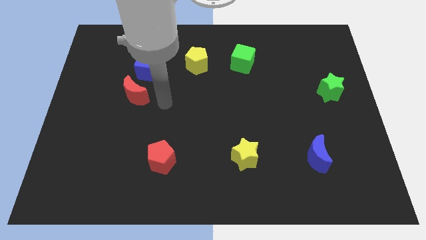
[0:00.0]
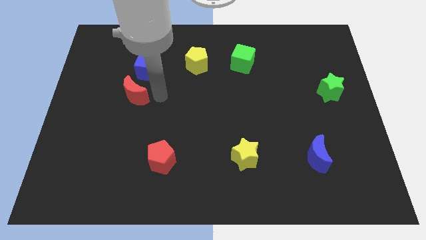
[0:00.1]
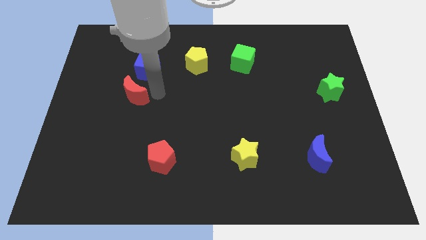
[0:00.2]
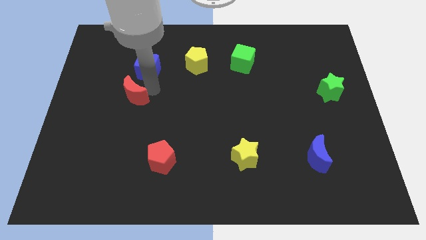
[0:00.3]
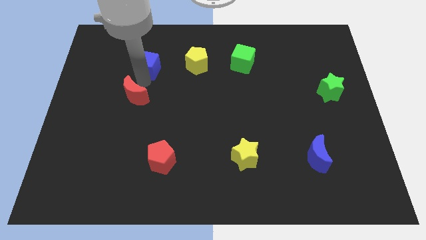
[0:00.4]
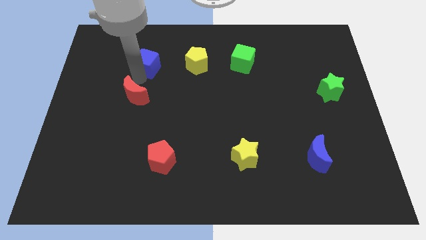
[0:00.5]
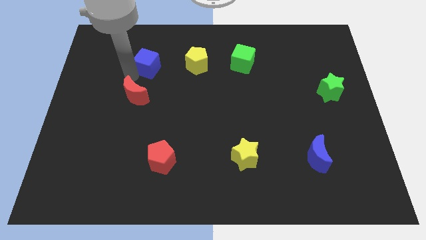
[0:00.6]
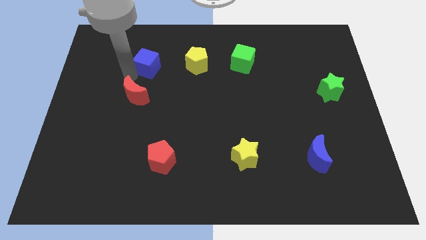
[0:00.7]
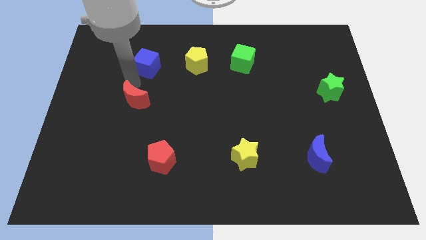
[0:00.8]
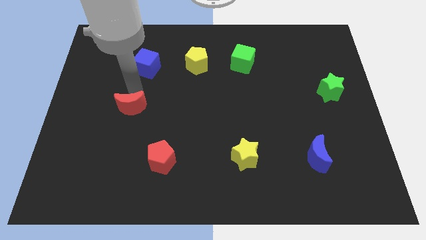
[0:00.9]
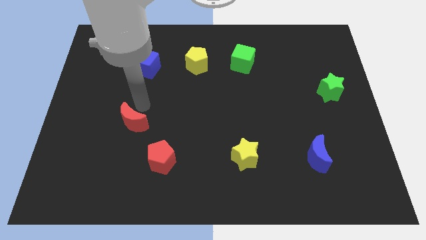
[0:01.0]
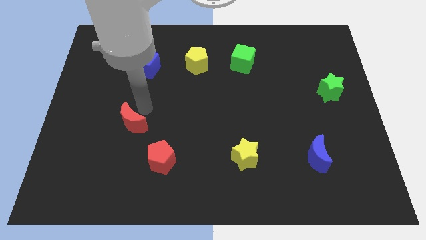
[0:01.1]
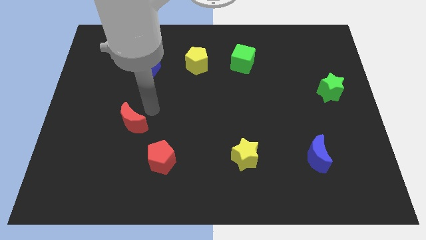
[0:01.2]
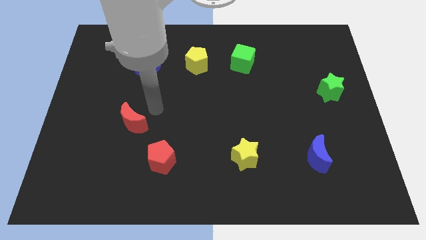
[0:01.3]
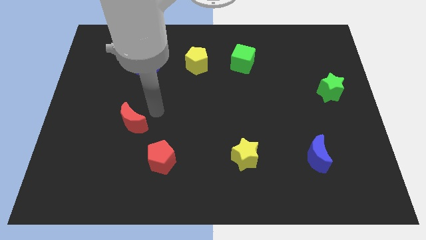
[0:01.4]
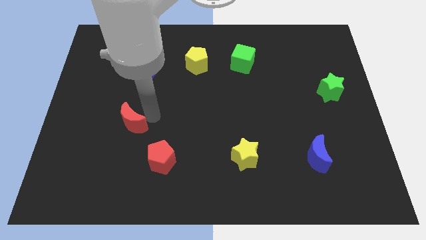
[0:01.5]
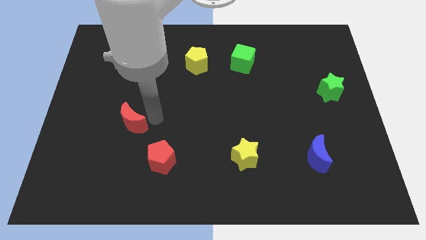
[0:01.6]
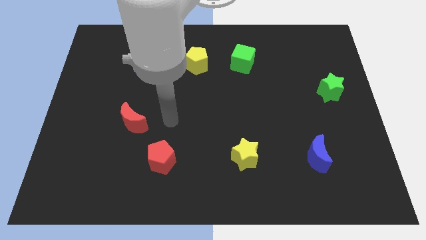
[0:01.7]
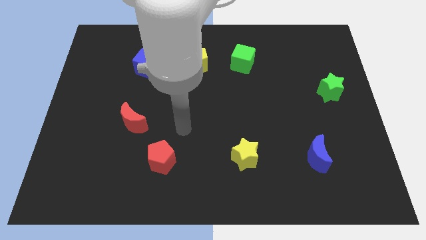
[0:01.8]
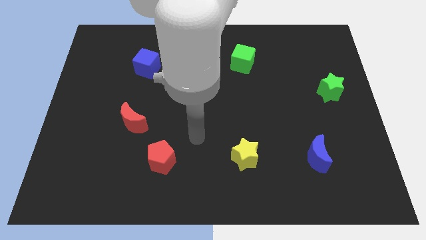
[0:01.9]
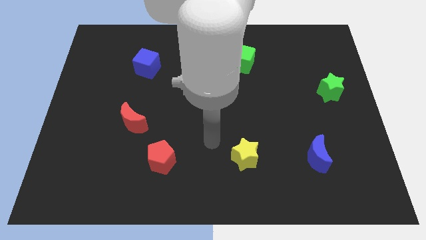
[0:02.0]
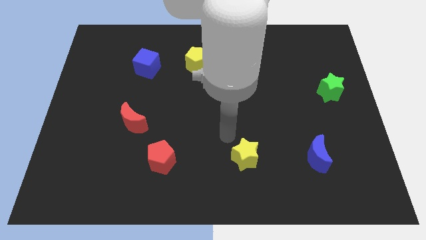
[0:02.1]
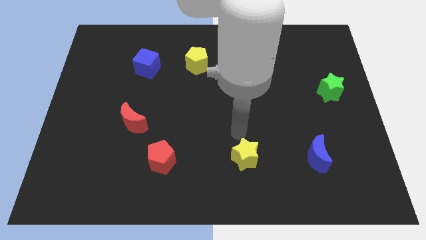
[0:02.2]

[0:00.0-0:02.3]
push the red moon downward

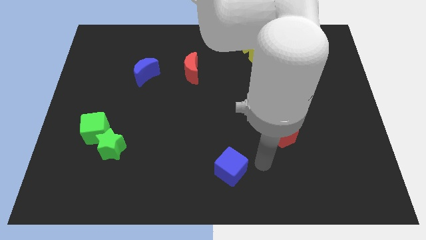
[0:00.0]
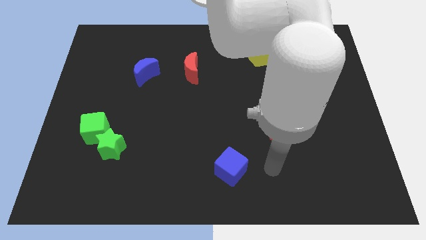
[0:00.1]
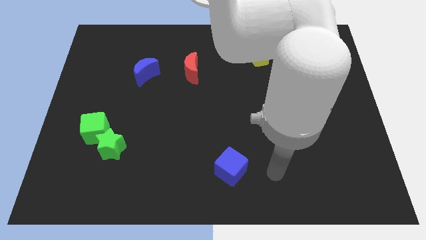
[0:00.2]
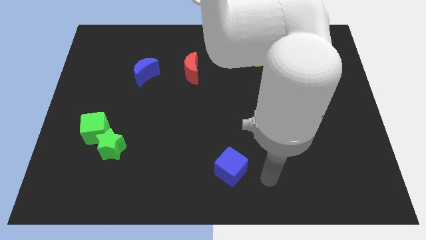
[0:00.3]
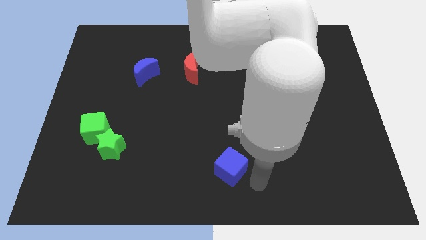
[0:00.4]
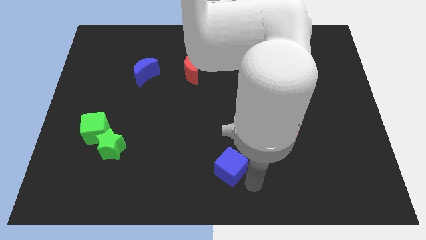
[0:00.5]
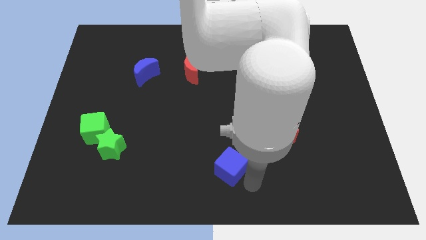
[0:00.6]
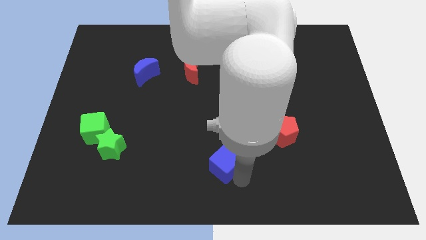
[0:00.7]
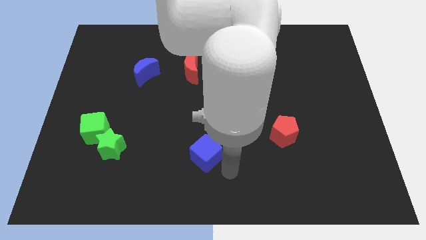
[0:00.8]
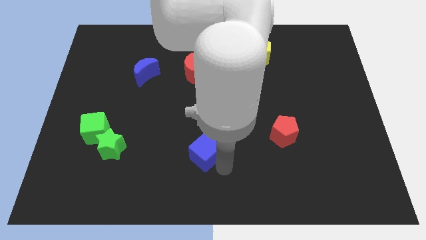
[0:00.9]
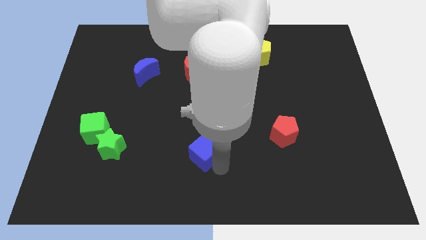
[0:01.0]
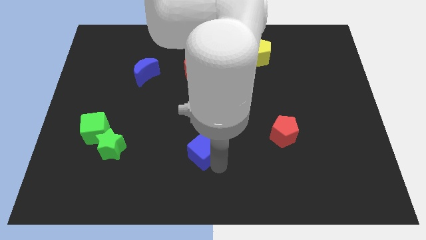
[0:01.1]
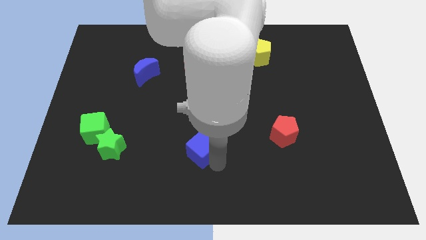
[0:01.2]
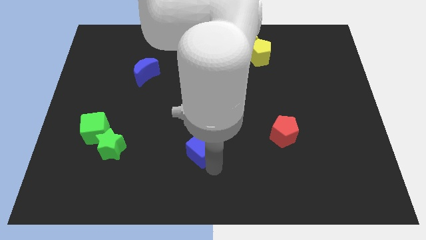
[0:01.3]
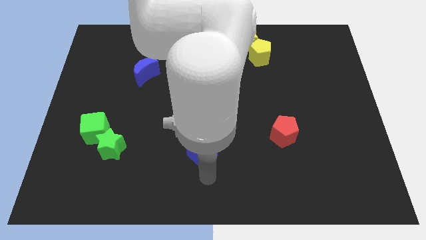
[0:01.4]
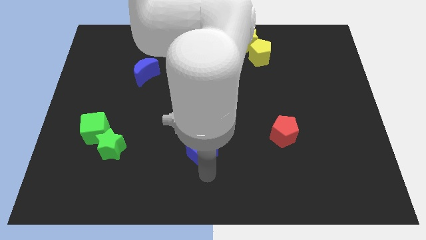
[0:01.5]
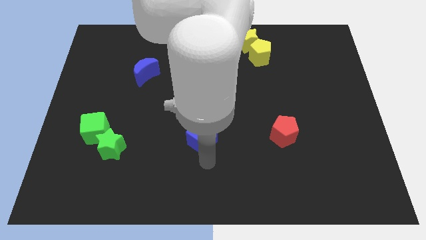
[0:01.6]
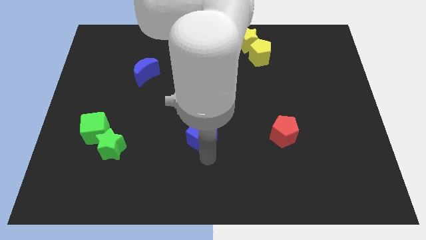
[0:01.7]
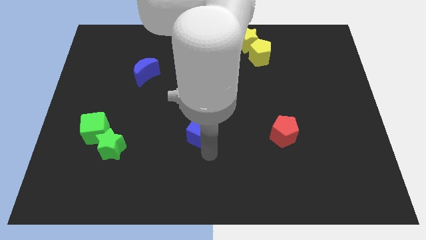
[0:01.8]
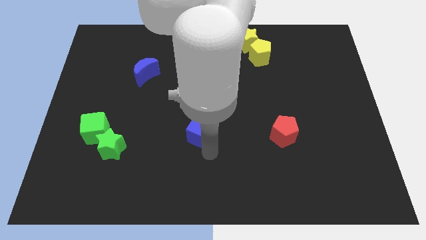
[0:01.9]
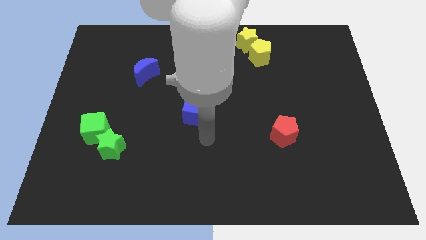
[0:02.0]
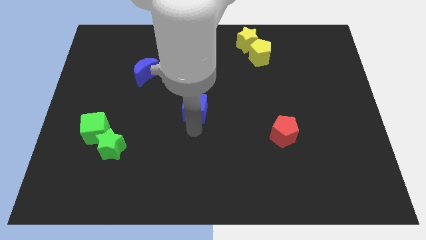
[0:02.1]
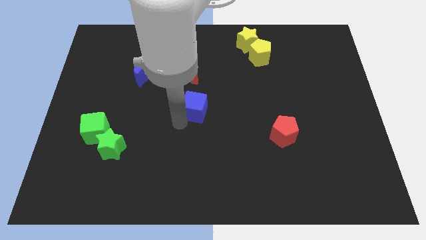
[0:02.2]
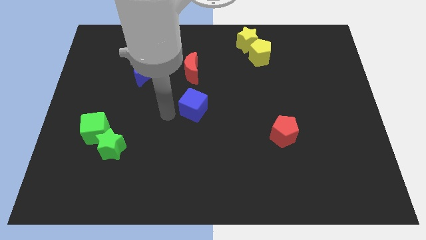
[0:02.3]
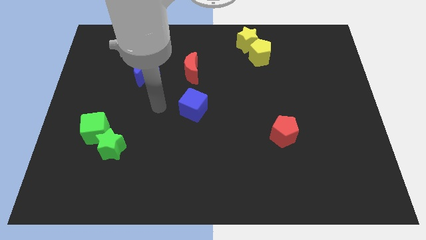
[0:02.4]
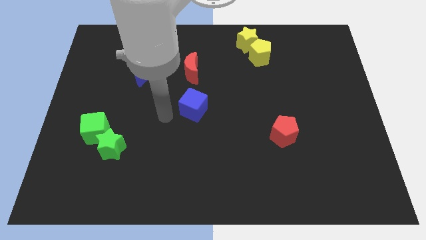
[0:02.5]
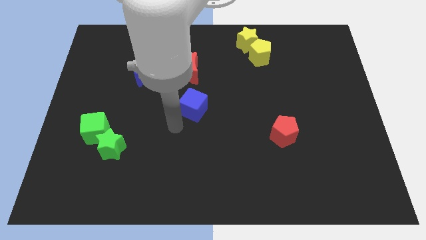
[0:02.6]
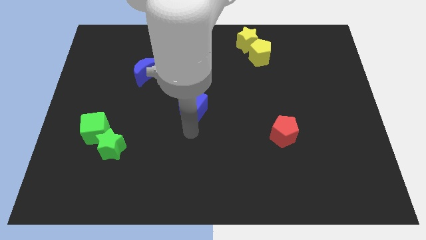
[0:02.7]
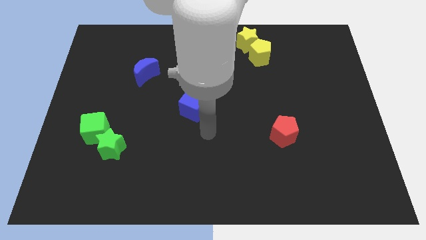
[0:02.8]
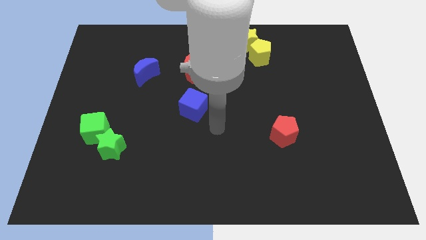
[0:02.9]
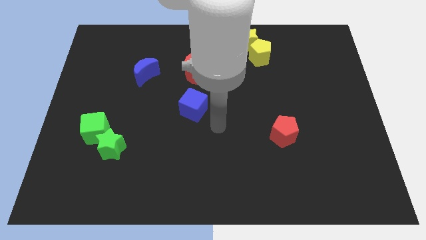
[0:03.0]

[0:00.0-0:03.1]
move the blue cube to the bottom of the red crescent

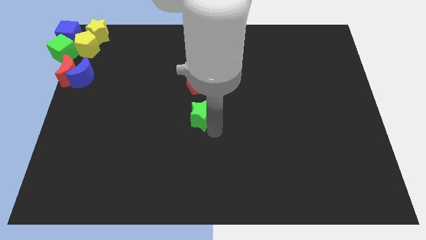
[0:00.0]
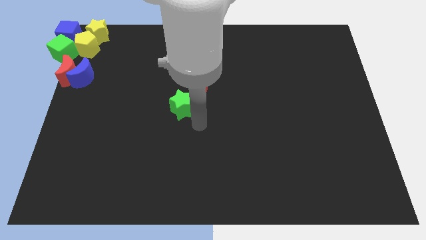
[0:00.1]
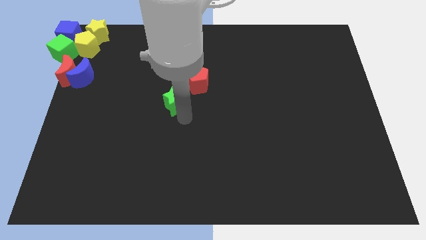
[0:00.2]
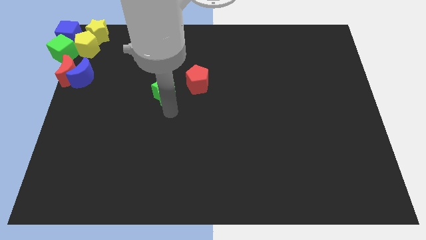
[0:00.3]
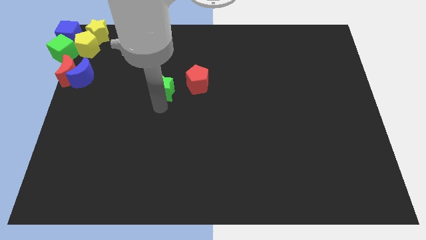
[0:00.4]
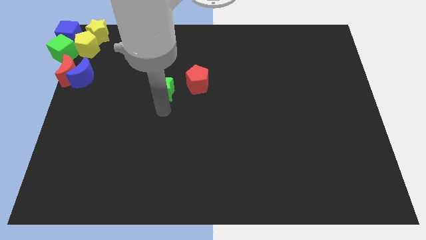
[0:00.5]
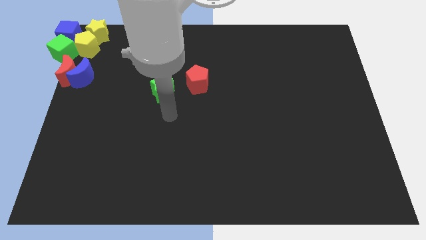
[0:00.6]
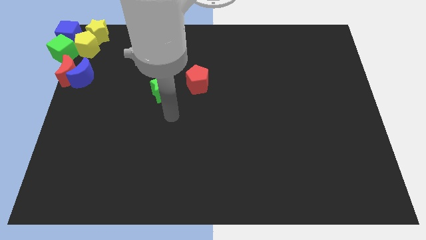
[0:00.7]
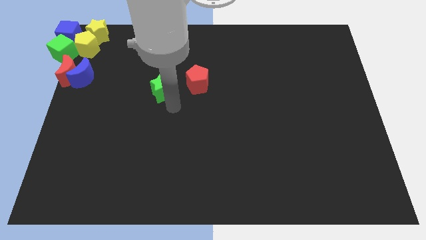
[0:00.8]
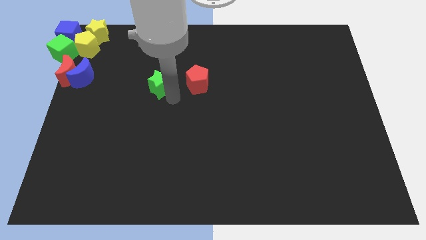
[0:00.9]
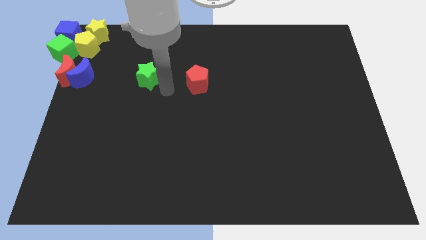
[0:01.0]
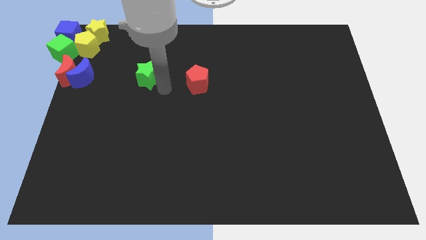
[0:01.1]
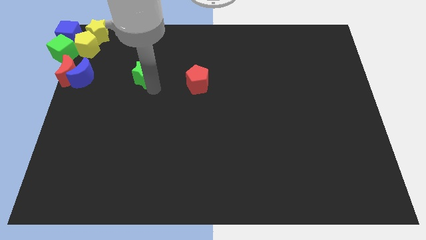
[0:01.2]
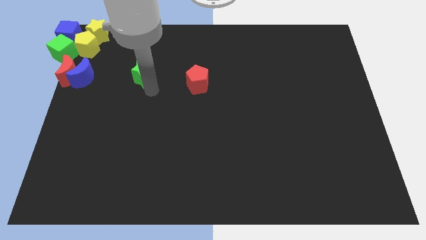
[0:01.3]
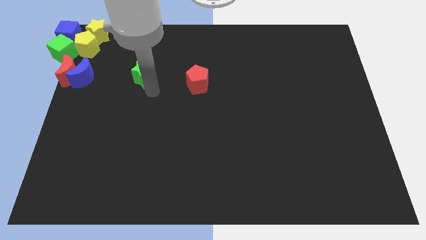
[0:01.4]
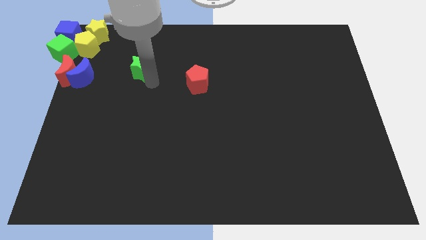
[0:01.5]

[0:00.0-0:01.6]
push the green star diagonally to the bottom right of the yellow star

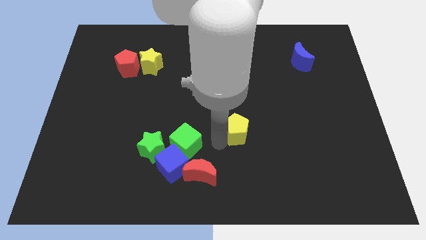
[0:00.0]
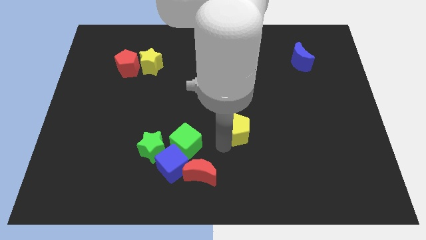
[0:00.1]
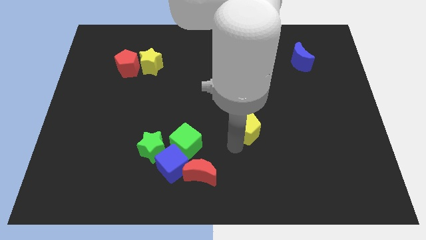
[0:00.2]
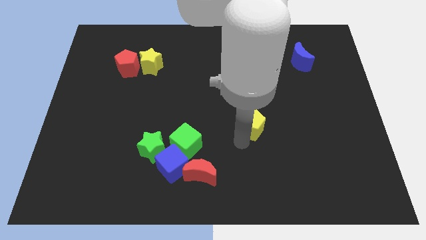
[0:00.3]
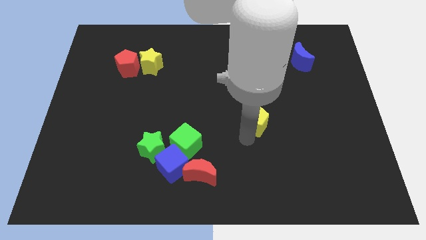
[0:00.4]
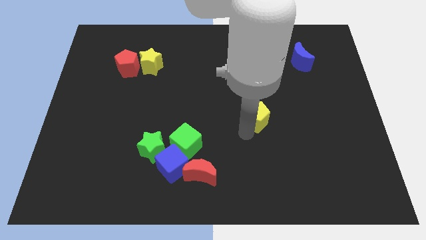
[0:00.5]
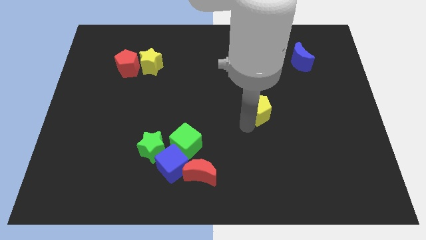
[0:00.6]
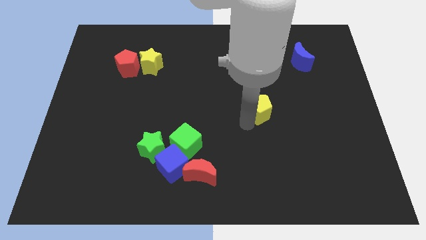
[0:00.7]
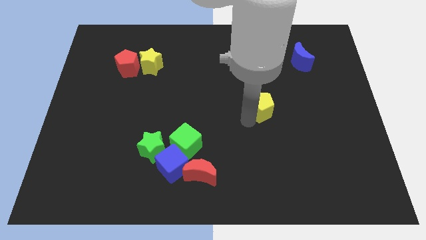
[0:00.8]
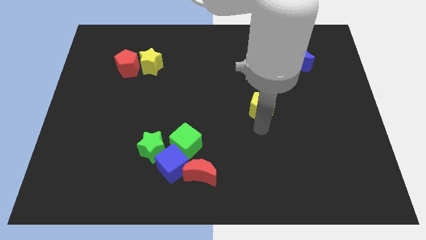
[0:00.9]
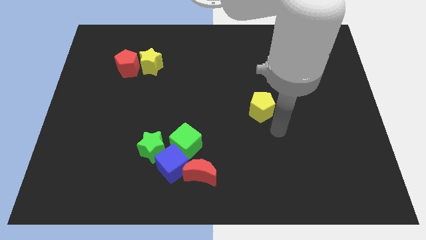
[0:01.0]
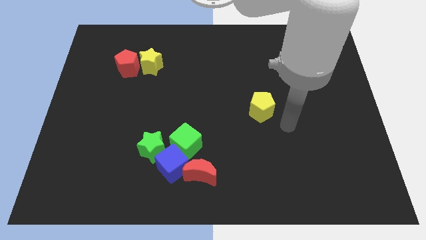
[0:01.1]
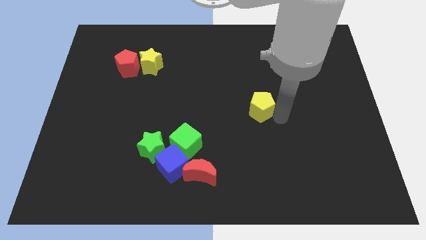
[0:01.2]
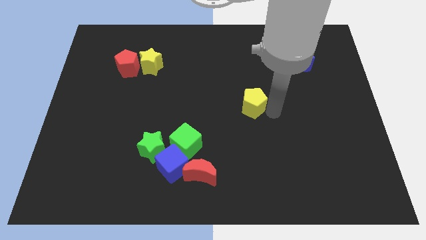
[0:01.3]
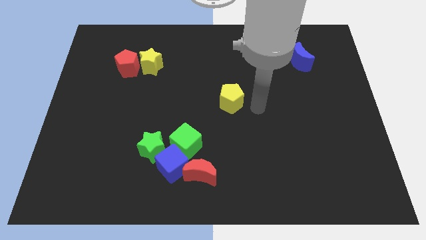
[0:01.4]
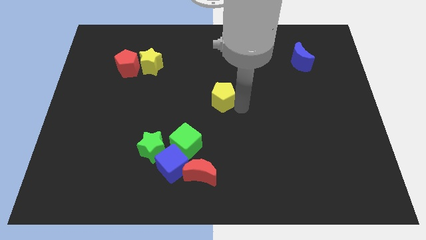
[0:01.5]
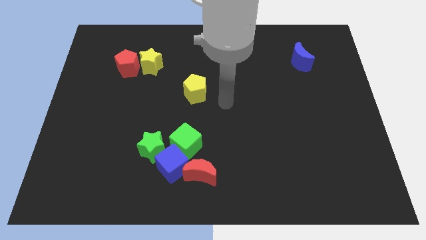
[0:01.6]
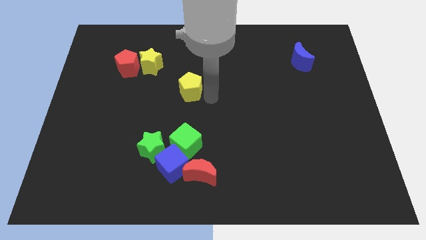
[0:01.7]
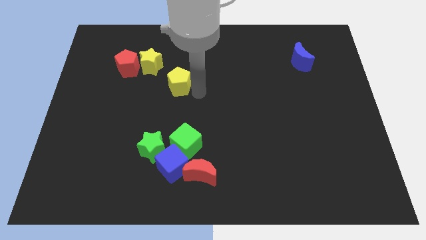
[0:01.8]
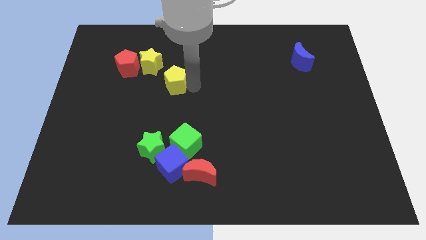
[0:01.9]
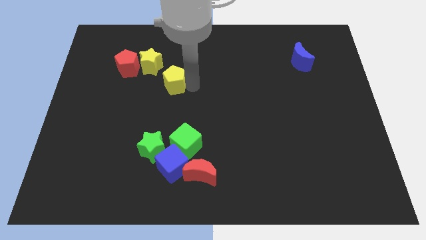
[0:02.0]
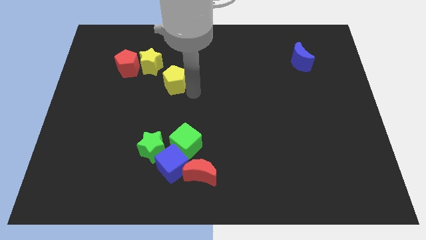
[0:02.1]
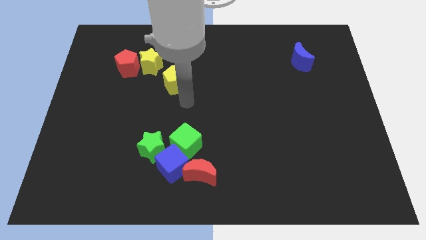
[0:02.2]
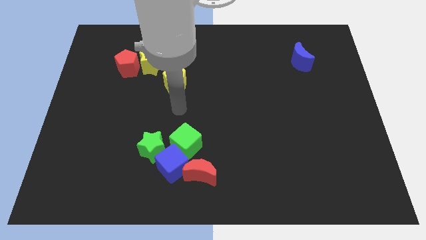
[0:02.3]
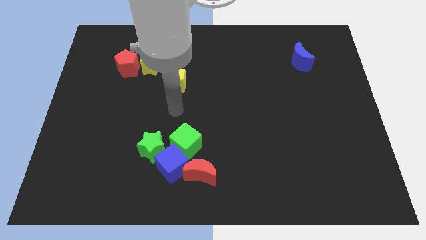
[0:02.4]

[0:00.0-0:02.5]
move the yellow pentagon towards the yellow star
